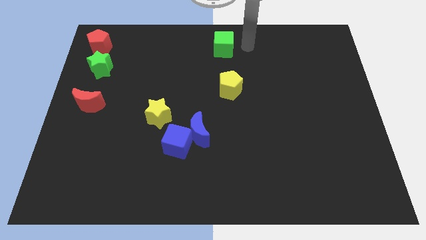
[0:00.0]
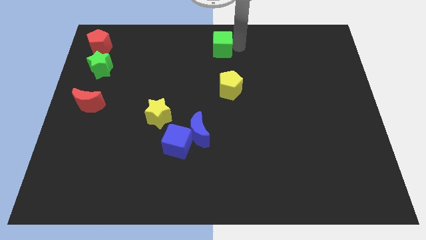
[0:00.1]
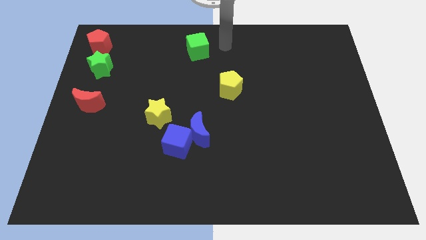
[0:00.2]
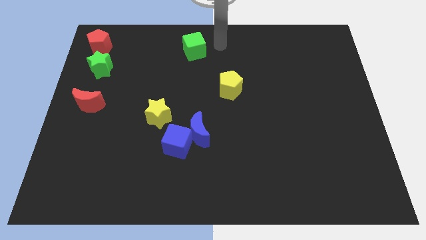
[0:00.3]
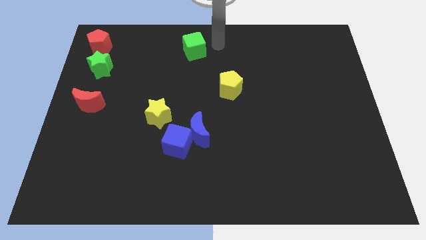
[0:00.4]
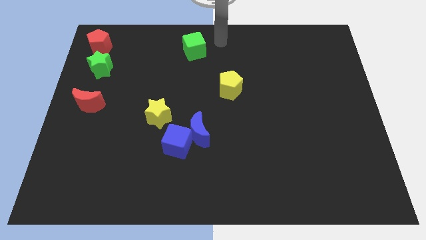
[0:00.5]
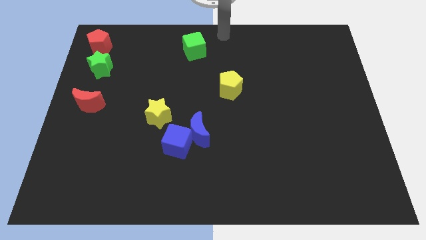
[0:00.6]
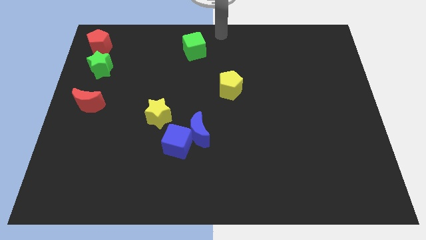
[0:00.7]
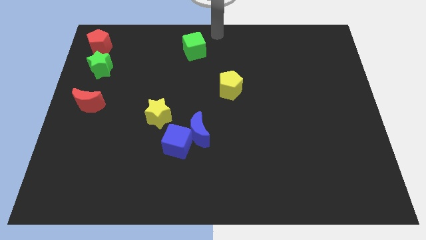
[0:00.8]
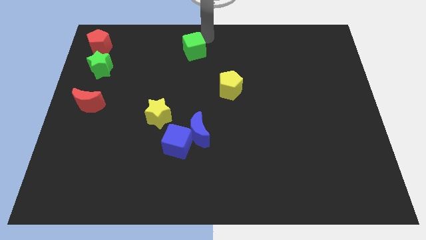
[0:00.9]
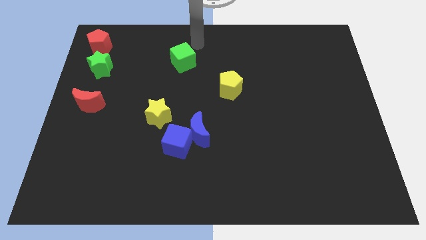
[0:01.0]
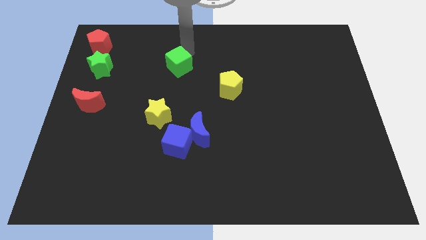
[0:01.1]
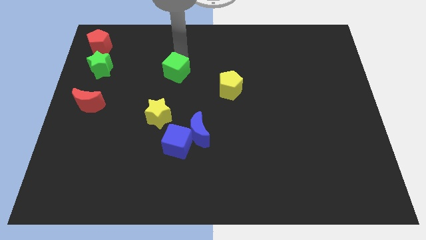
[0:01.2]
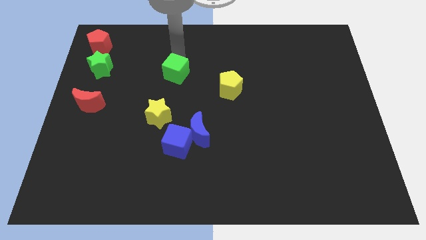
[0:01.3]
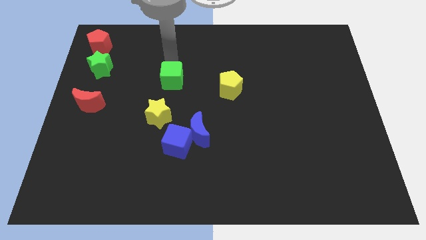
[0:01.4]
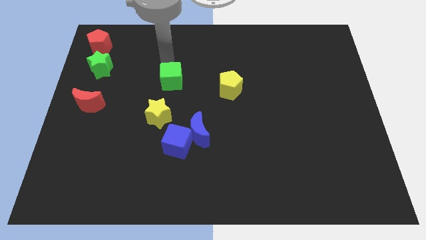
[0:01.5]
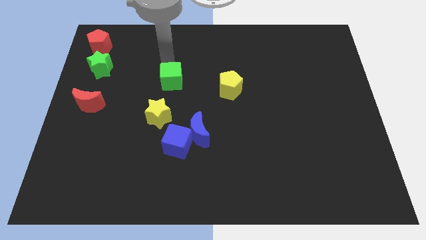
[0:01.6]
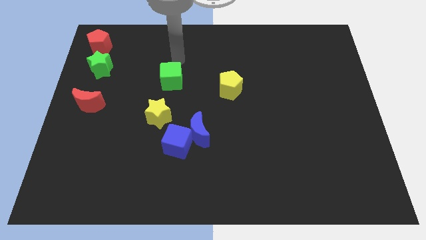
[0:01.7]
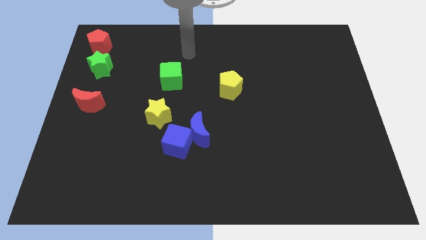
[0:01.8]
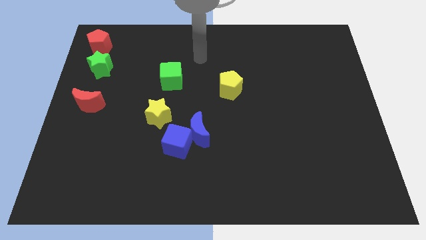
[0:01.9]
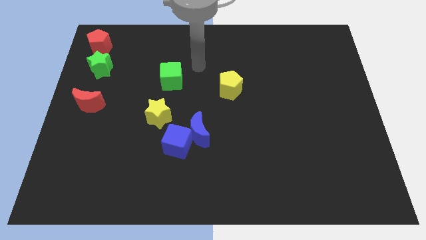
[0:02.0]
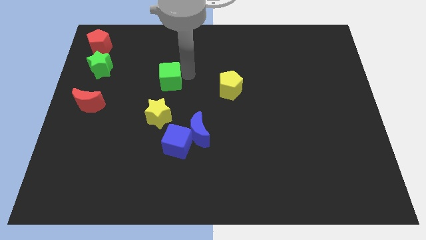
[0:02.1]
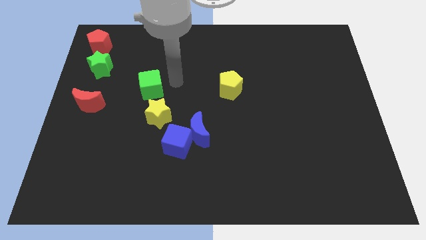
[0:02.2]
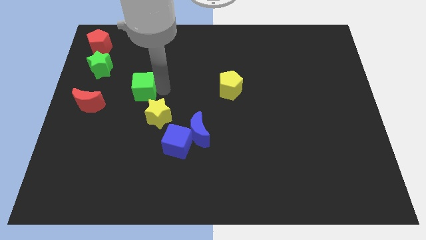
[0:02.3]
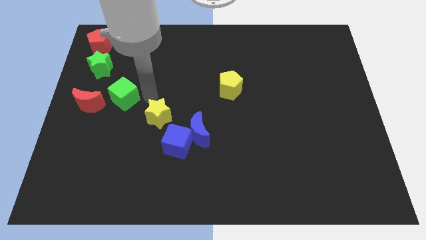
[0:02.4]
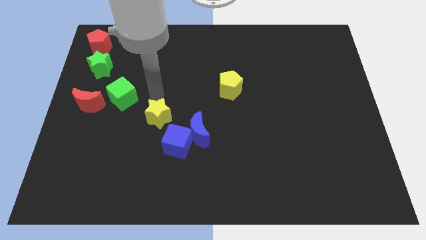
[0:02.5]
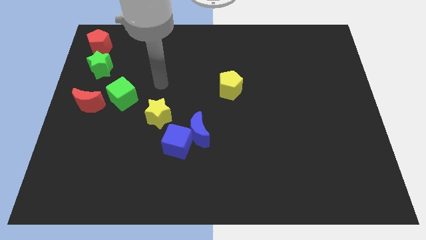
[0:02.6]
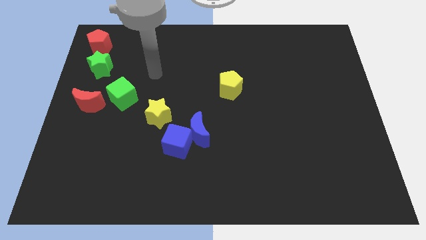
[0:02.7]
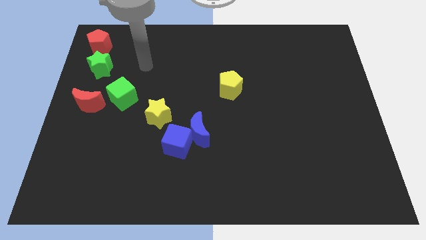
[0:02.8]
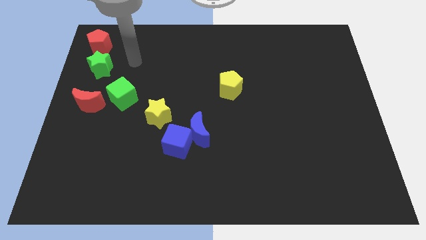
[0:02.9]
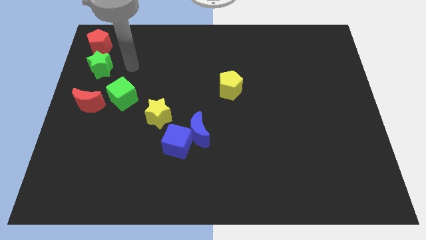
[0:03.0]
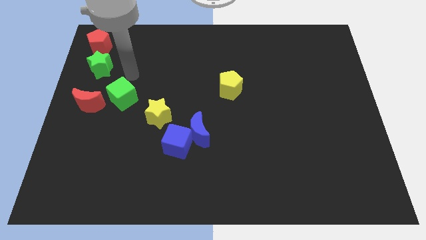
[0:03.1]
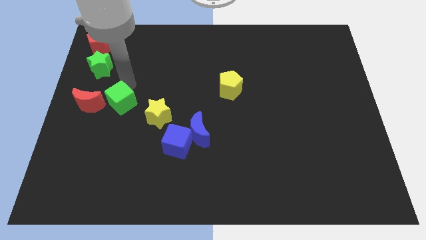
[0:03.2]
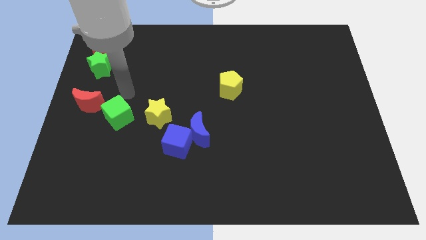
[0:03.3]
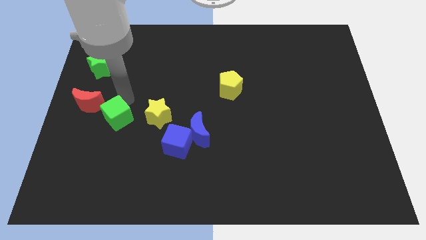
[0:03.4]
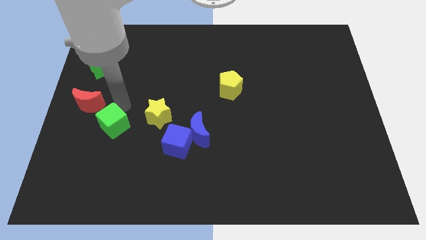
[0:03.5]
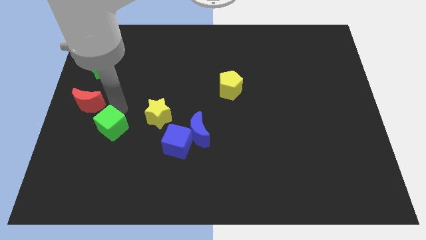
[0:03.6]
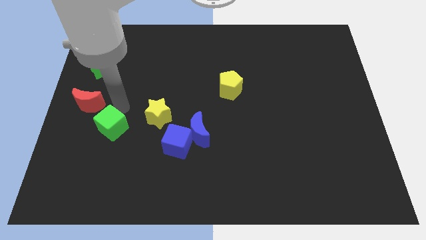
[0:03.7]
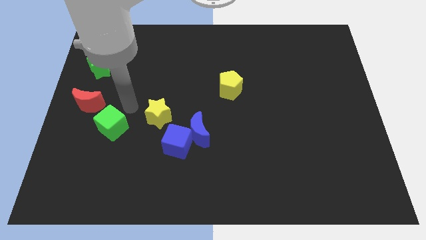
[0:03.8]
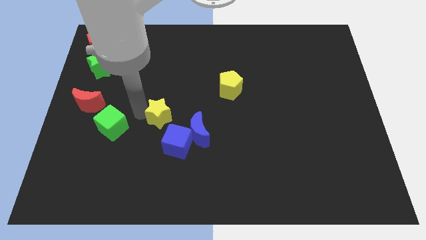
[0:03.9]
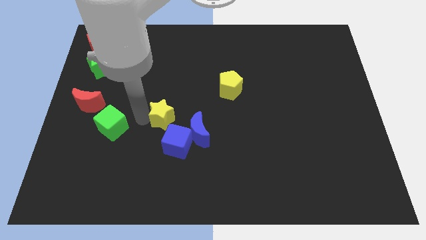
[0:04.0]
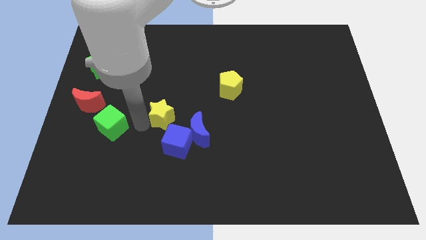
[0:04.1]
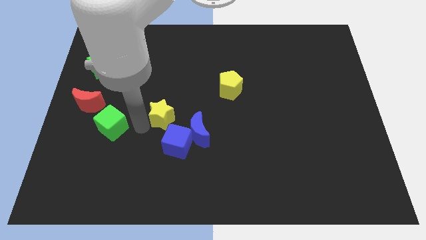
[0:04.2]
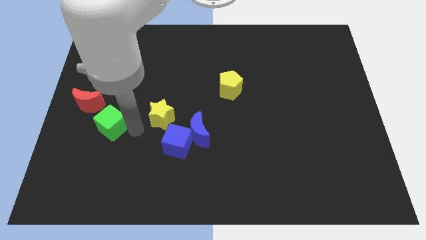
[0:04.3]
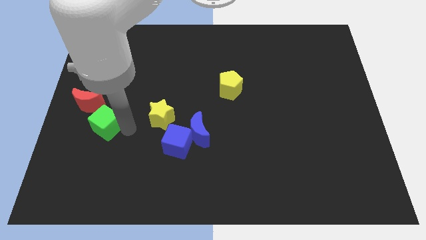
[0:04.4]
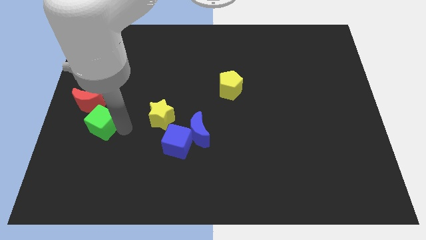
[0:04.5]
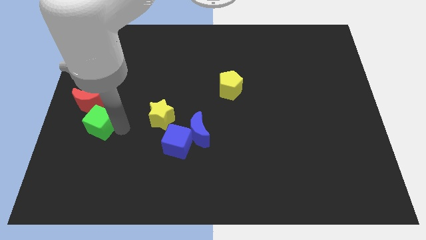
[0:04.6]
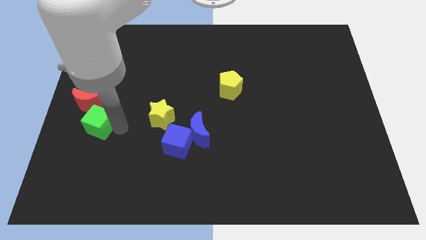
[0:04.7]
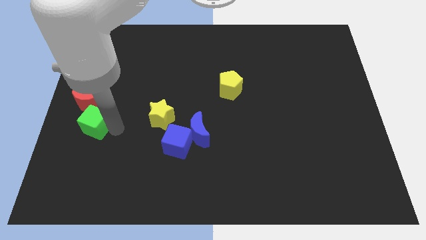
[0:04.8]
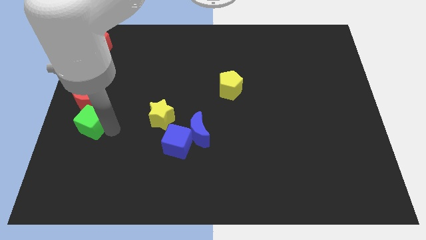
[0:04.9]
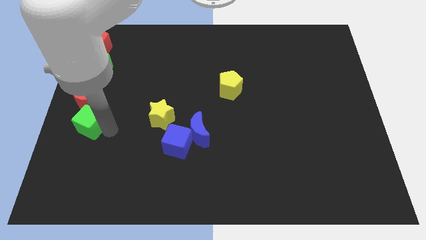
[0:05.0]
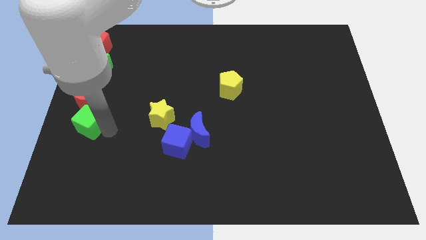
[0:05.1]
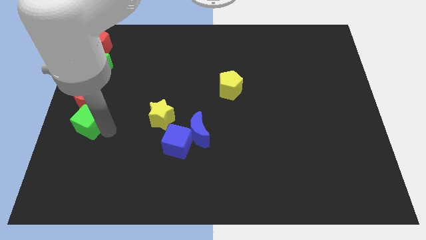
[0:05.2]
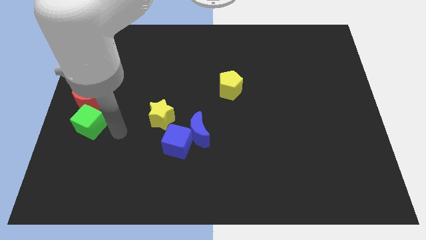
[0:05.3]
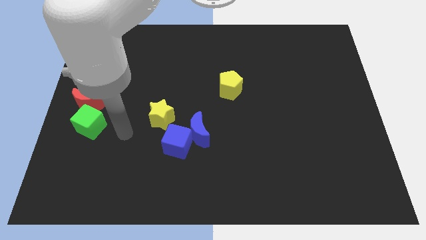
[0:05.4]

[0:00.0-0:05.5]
drag green cube vertically at the bottom of the red crescent

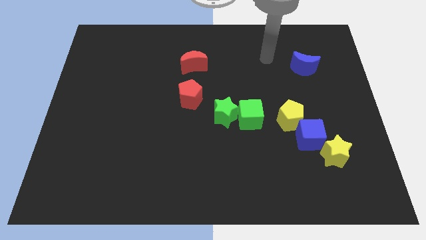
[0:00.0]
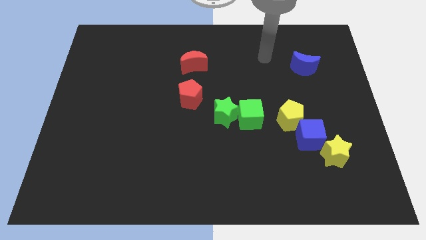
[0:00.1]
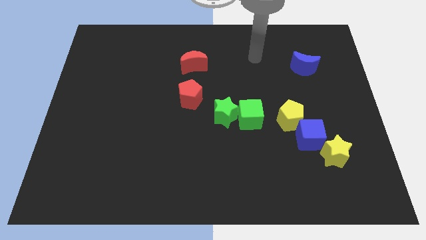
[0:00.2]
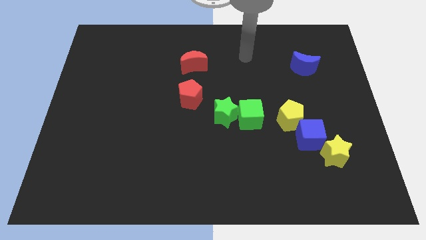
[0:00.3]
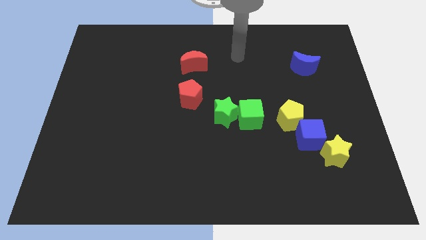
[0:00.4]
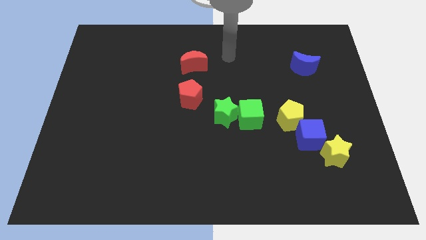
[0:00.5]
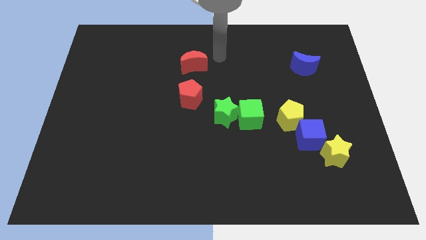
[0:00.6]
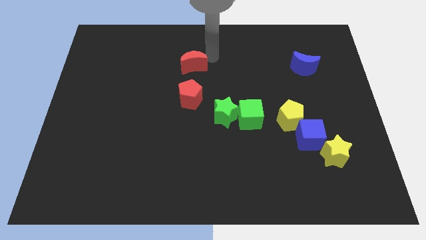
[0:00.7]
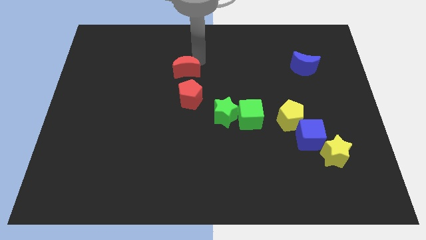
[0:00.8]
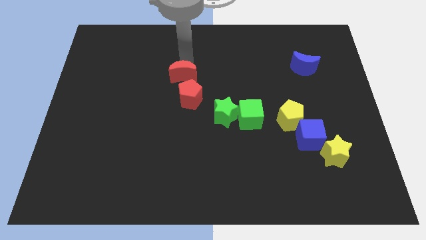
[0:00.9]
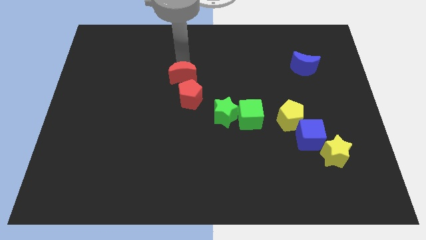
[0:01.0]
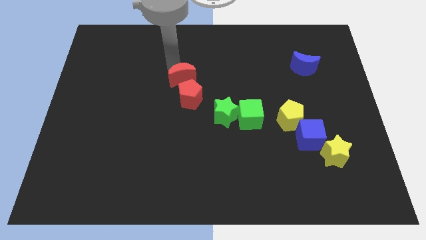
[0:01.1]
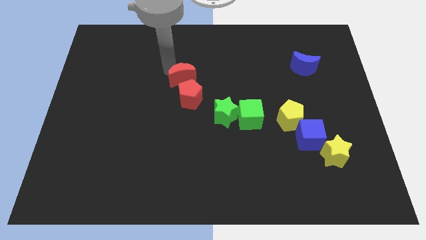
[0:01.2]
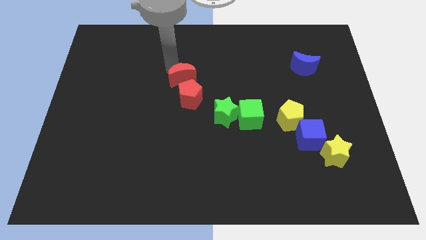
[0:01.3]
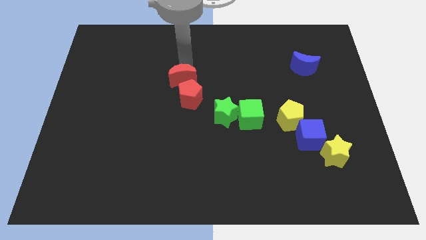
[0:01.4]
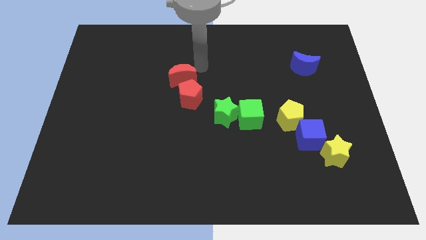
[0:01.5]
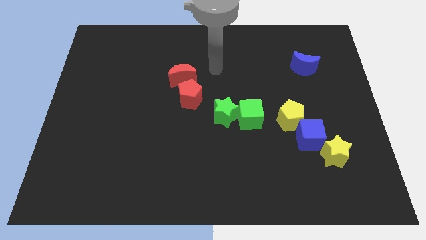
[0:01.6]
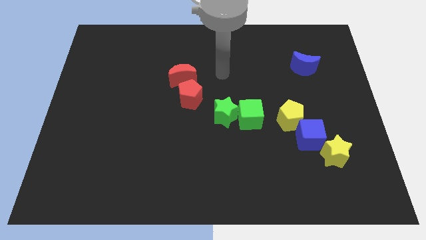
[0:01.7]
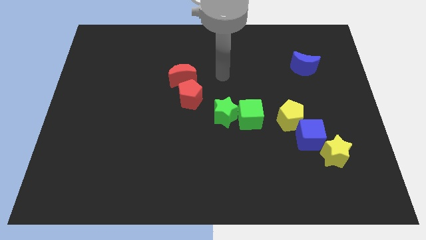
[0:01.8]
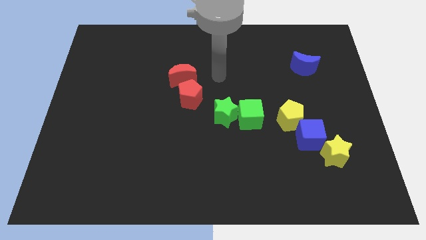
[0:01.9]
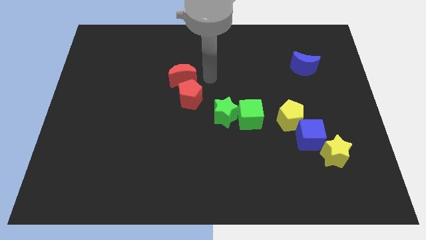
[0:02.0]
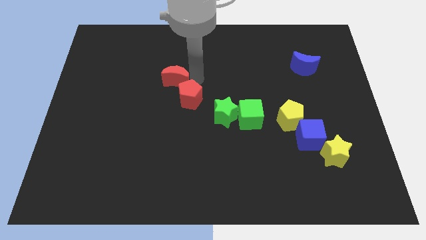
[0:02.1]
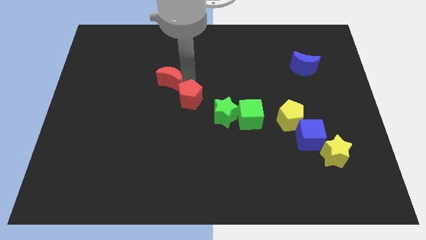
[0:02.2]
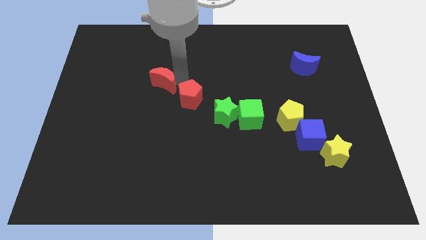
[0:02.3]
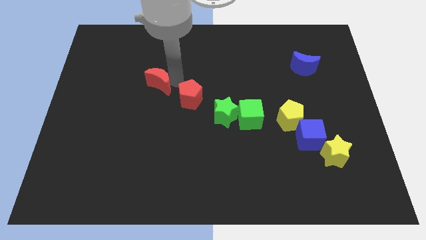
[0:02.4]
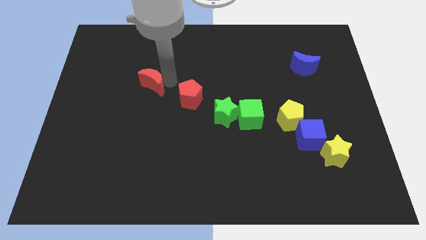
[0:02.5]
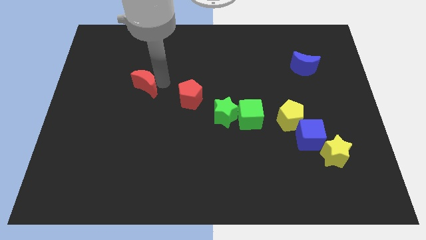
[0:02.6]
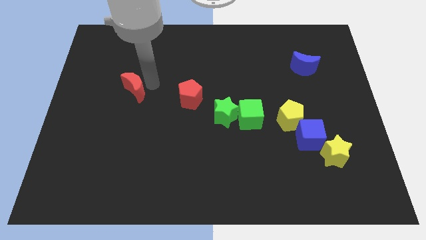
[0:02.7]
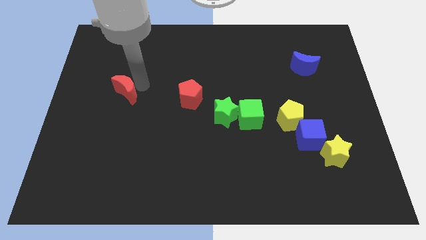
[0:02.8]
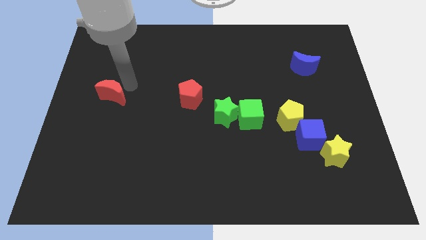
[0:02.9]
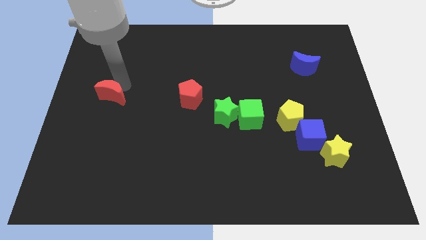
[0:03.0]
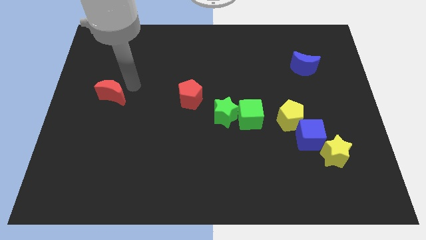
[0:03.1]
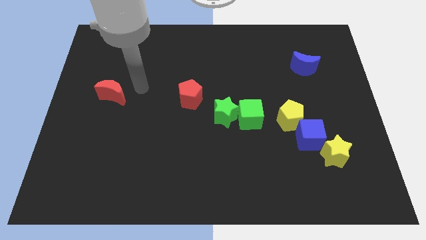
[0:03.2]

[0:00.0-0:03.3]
move the red crescent towards the center left
